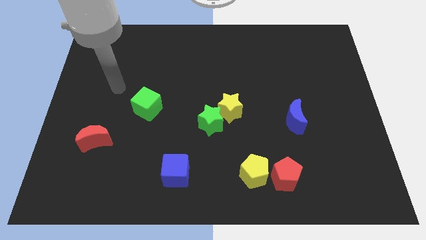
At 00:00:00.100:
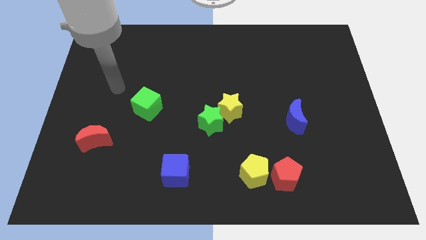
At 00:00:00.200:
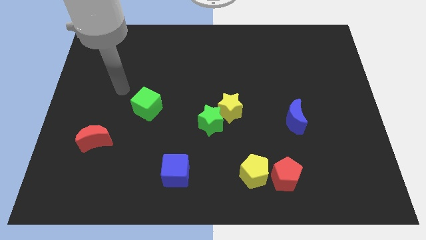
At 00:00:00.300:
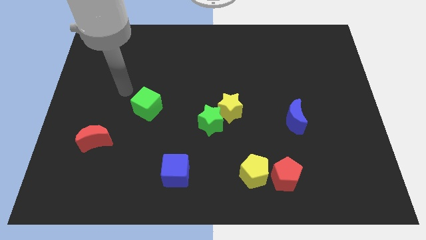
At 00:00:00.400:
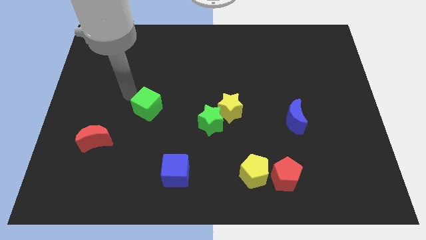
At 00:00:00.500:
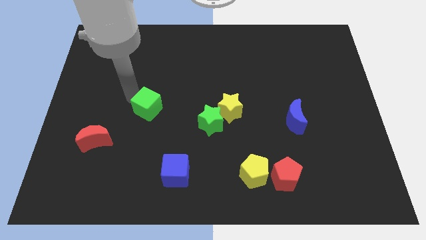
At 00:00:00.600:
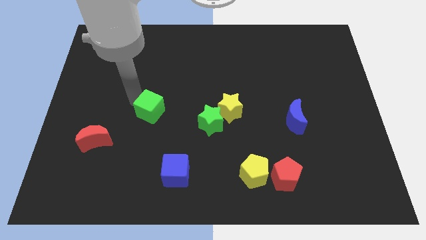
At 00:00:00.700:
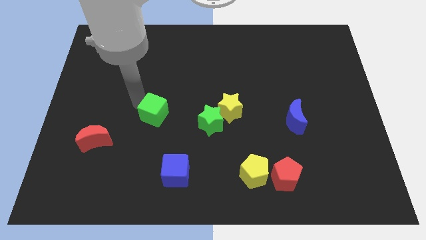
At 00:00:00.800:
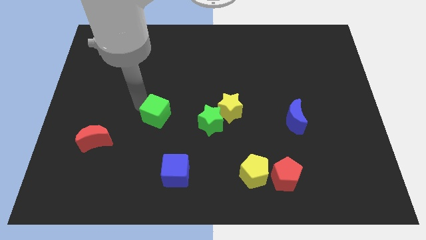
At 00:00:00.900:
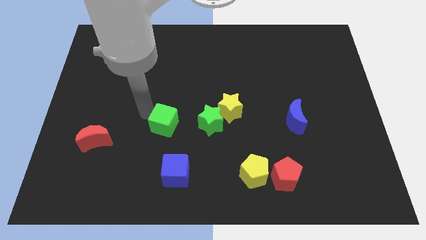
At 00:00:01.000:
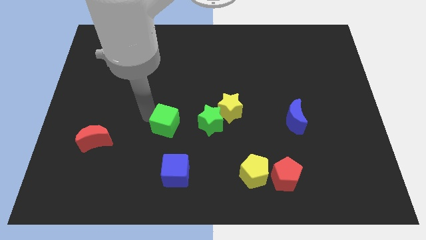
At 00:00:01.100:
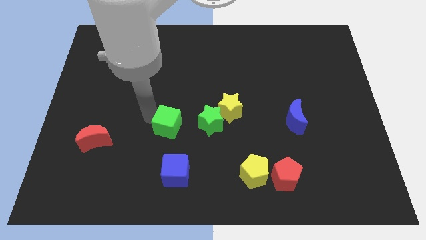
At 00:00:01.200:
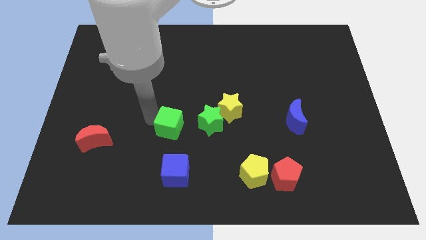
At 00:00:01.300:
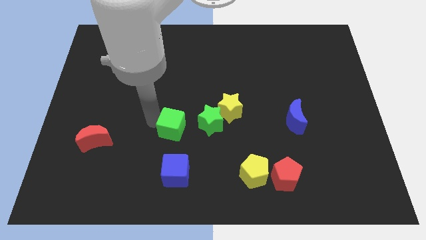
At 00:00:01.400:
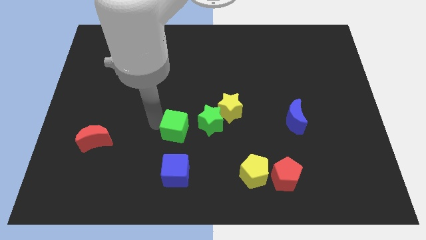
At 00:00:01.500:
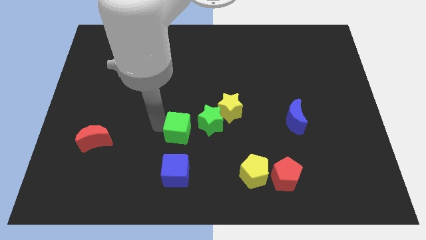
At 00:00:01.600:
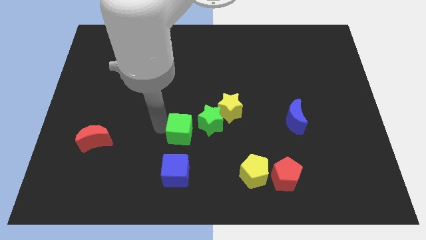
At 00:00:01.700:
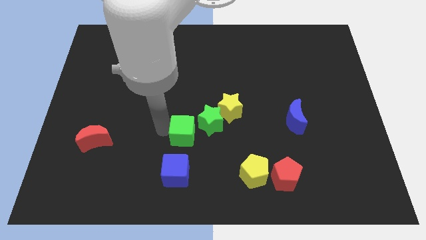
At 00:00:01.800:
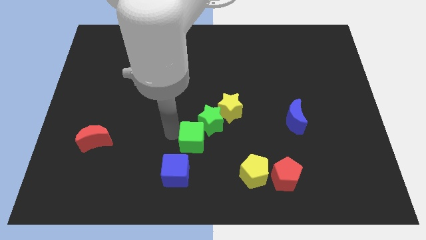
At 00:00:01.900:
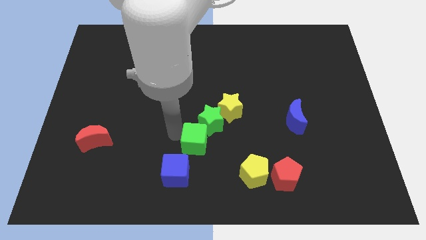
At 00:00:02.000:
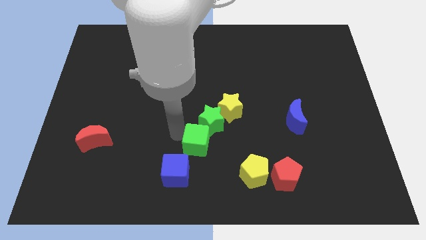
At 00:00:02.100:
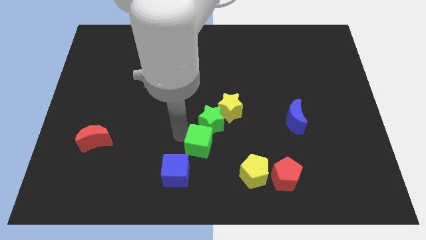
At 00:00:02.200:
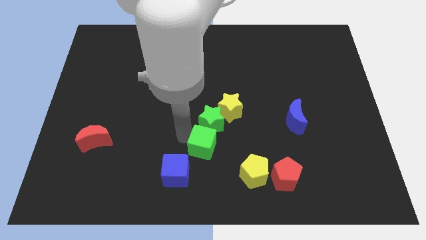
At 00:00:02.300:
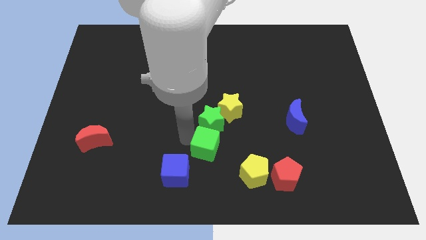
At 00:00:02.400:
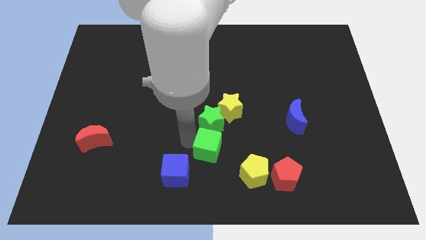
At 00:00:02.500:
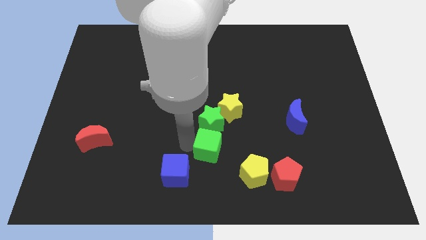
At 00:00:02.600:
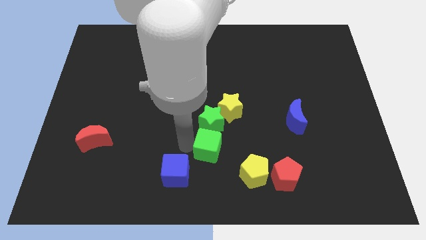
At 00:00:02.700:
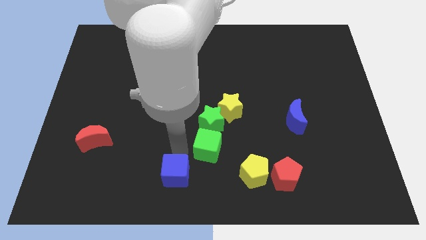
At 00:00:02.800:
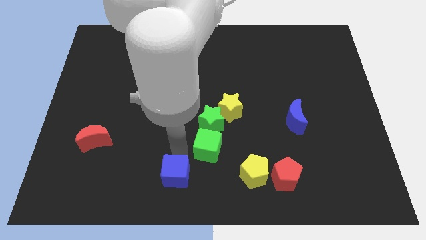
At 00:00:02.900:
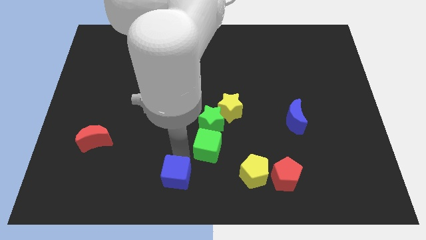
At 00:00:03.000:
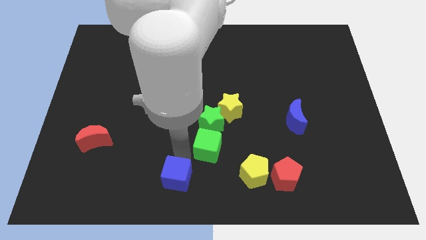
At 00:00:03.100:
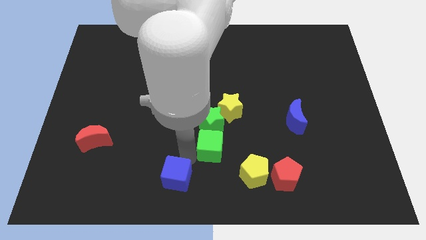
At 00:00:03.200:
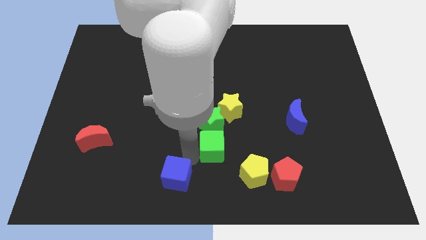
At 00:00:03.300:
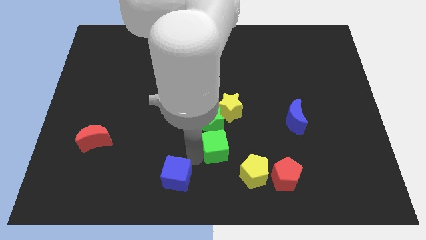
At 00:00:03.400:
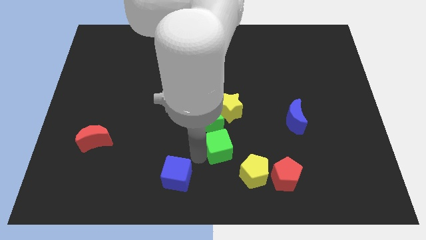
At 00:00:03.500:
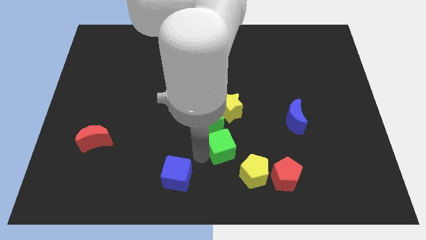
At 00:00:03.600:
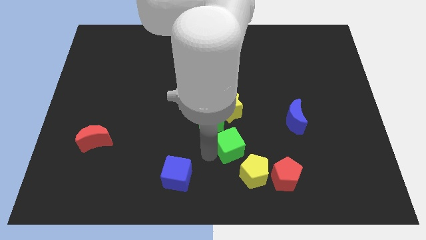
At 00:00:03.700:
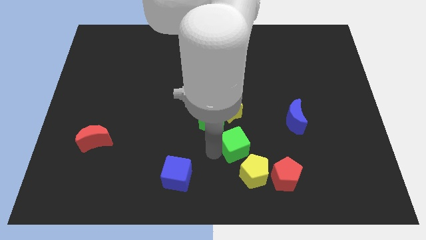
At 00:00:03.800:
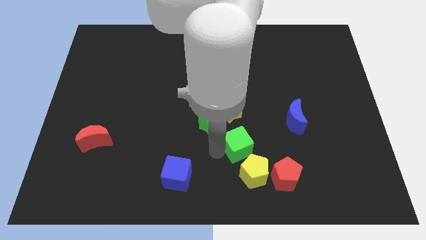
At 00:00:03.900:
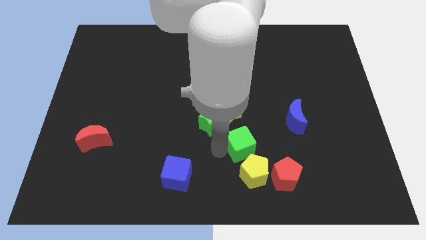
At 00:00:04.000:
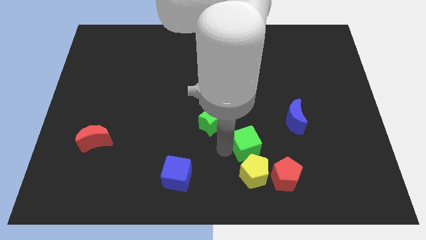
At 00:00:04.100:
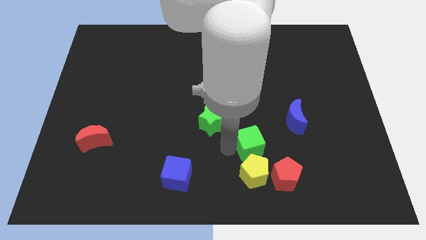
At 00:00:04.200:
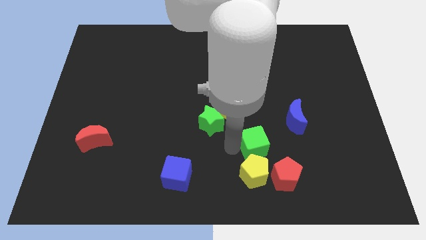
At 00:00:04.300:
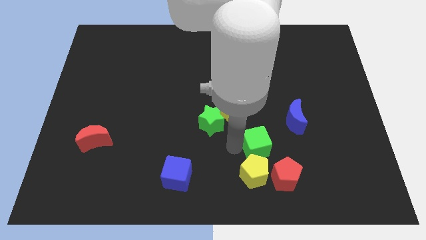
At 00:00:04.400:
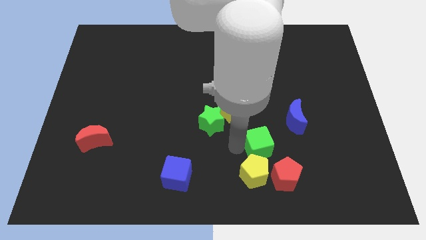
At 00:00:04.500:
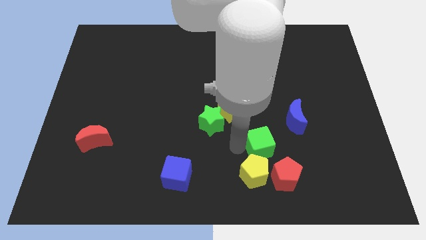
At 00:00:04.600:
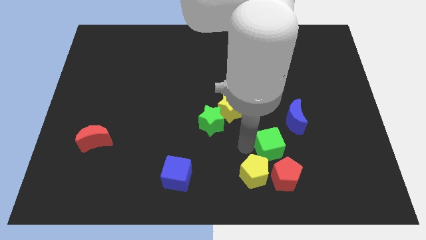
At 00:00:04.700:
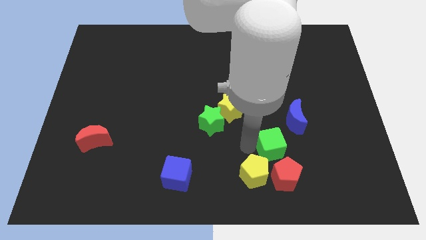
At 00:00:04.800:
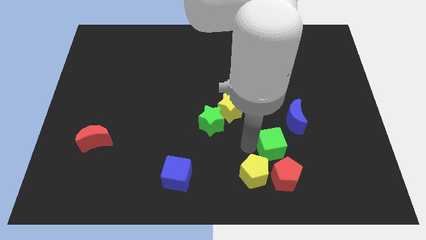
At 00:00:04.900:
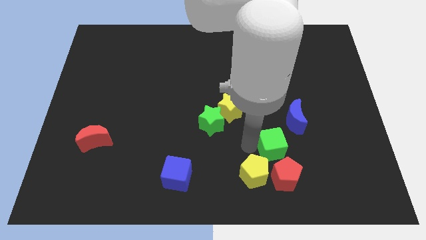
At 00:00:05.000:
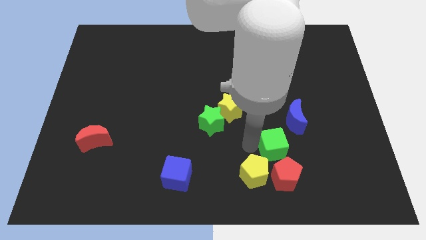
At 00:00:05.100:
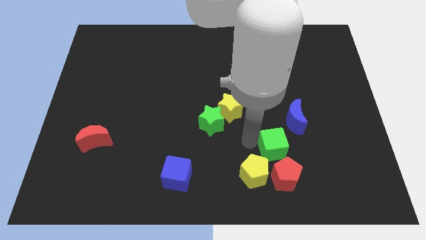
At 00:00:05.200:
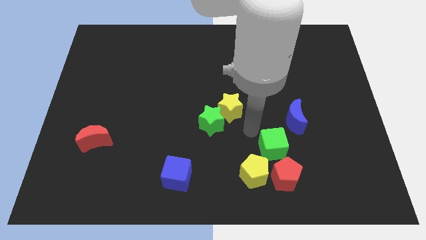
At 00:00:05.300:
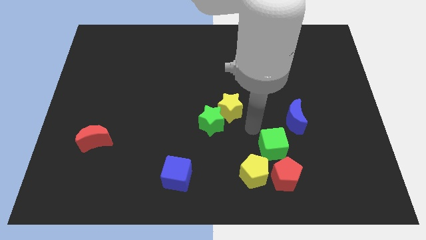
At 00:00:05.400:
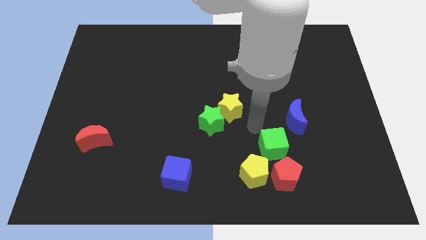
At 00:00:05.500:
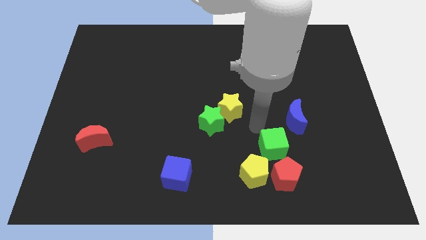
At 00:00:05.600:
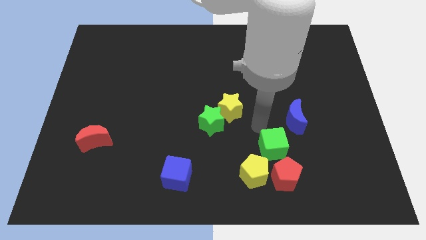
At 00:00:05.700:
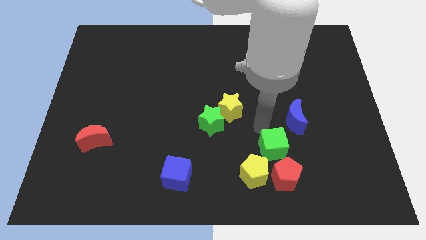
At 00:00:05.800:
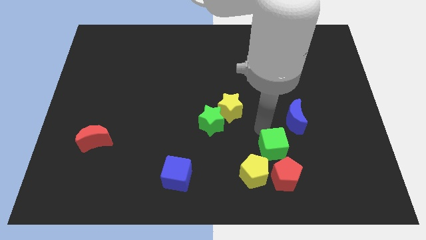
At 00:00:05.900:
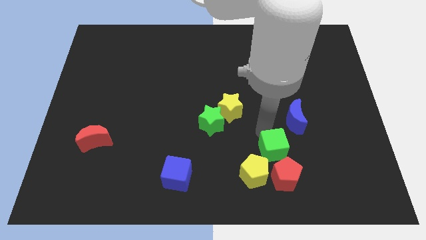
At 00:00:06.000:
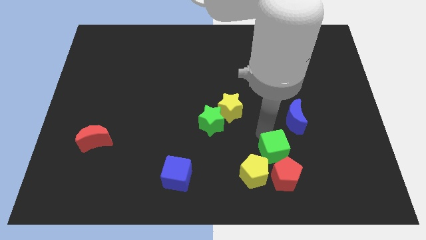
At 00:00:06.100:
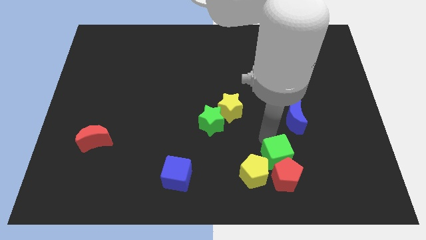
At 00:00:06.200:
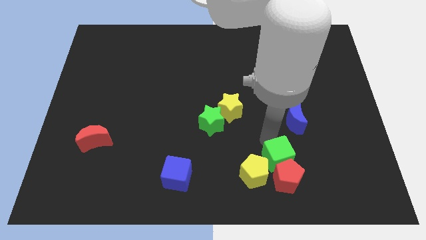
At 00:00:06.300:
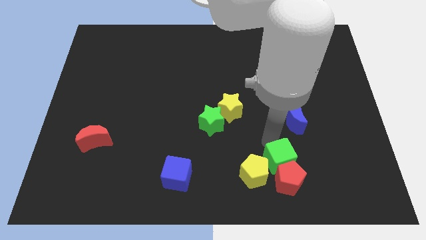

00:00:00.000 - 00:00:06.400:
slide the green cube next to the red pentagon

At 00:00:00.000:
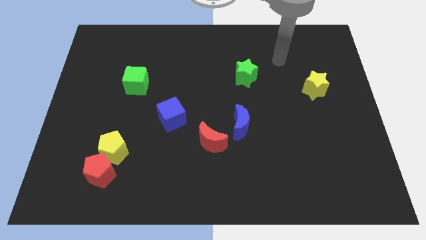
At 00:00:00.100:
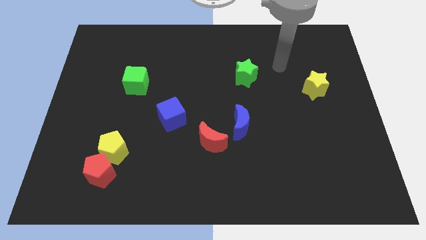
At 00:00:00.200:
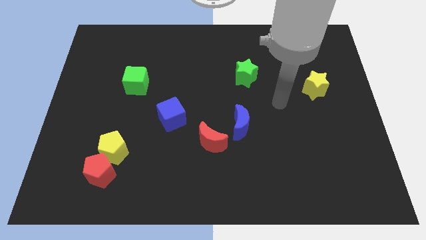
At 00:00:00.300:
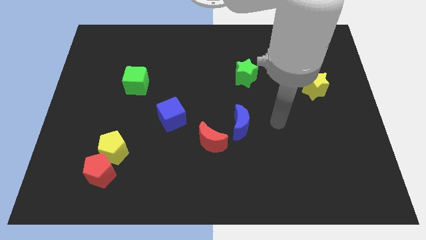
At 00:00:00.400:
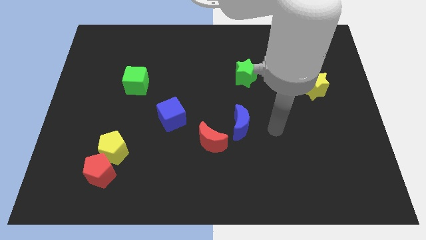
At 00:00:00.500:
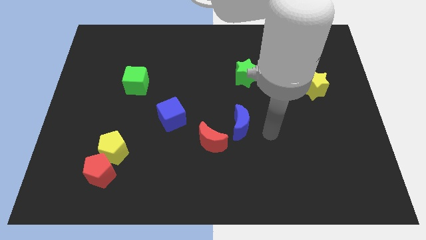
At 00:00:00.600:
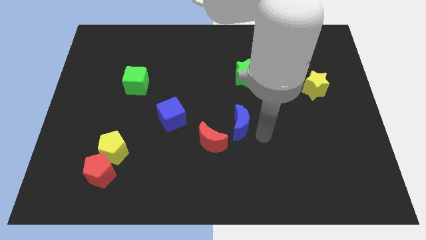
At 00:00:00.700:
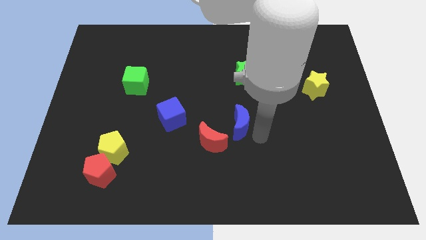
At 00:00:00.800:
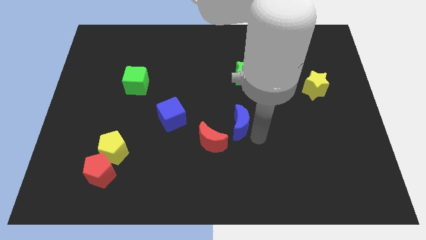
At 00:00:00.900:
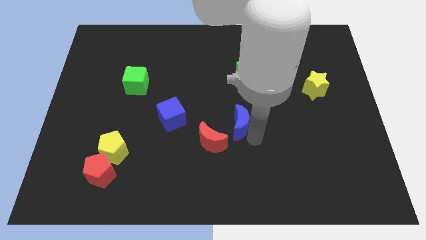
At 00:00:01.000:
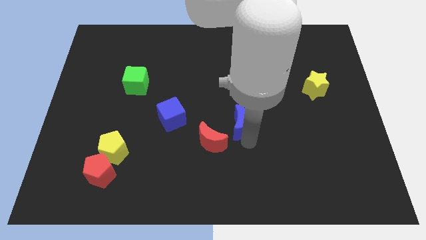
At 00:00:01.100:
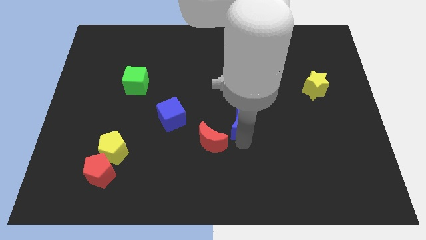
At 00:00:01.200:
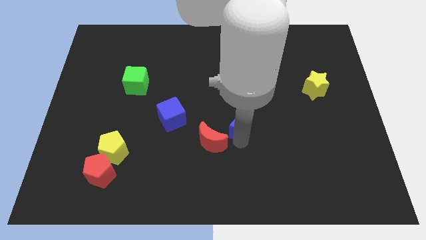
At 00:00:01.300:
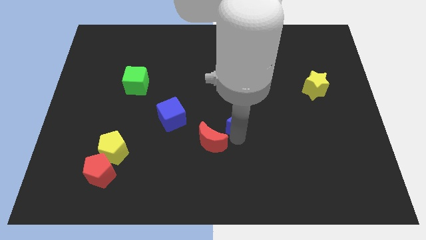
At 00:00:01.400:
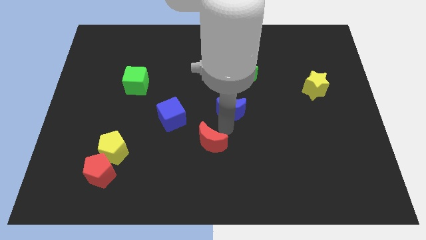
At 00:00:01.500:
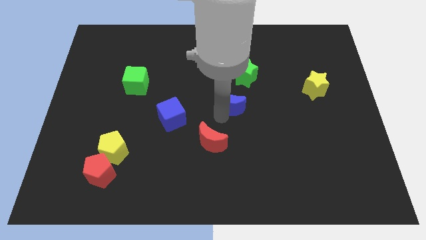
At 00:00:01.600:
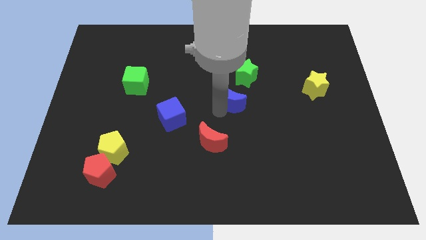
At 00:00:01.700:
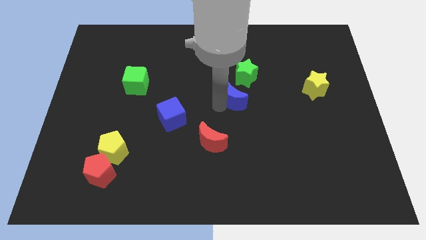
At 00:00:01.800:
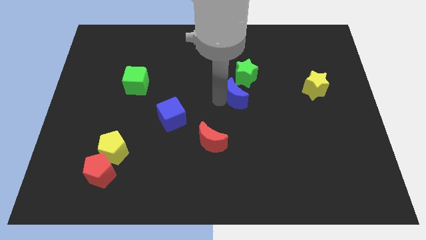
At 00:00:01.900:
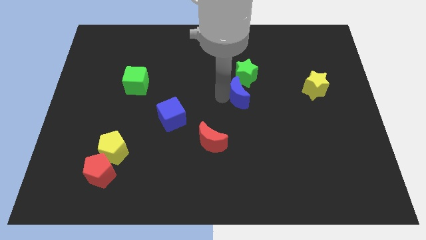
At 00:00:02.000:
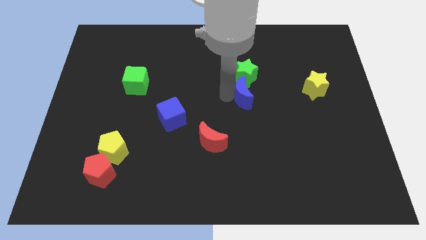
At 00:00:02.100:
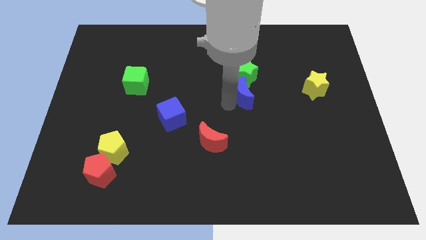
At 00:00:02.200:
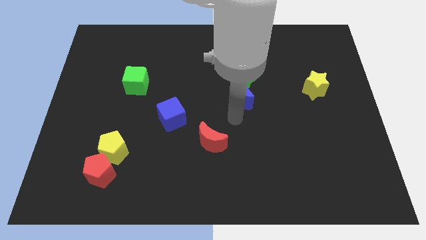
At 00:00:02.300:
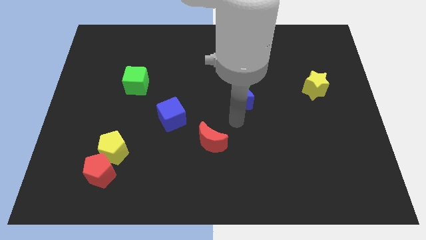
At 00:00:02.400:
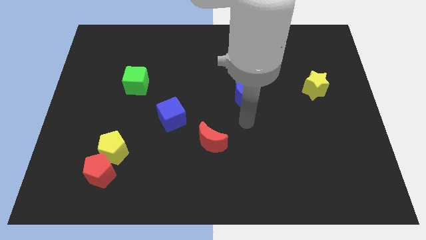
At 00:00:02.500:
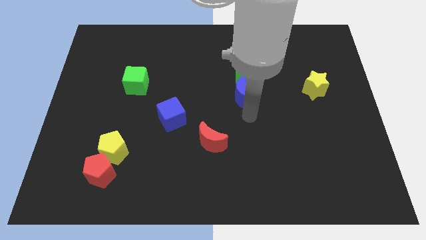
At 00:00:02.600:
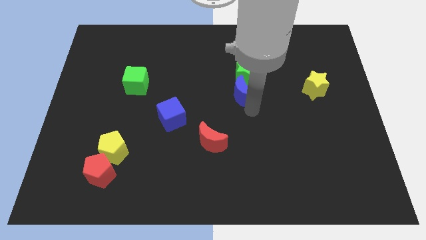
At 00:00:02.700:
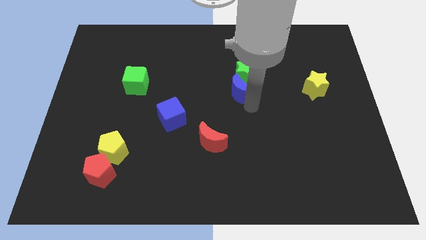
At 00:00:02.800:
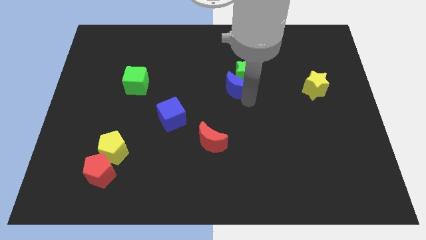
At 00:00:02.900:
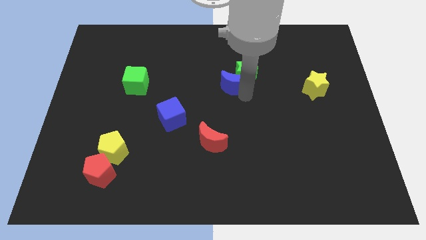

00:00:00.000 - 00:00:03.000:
move the blue moon to the green star
